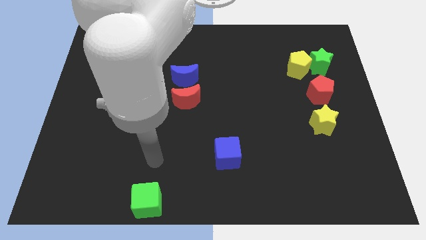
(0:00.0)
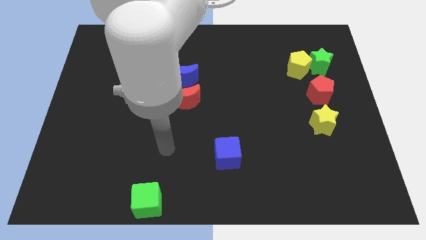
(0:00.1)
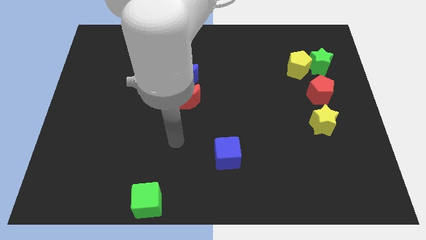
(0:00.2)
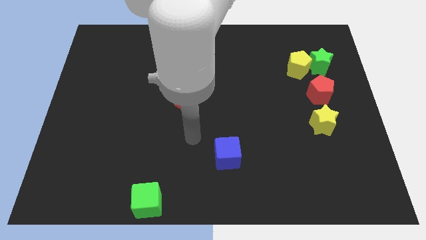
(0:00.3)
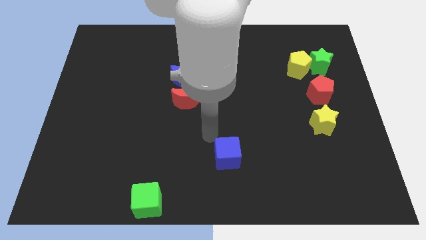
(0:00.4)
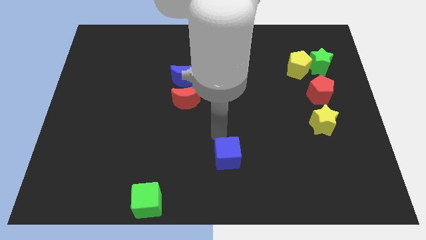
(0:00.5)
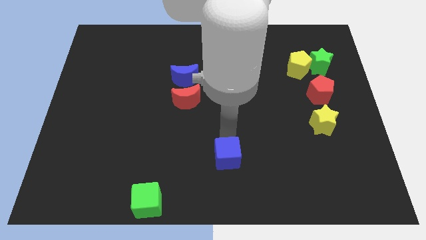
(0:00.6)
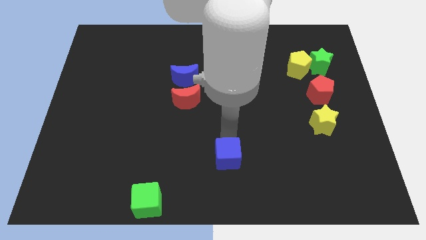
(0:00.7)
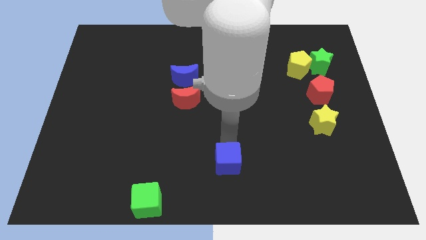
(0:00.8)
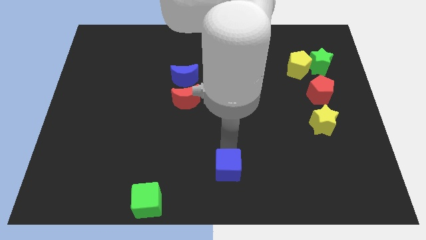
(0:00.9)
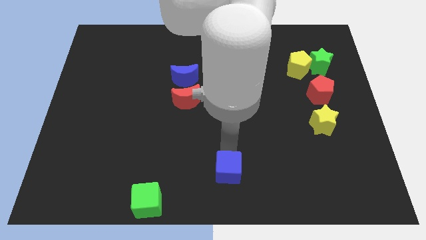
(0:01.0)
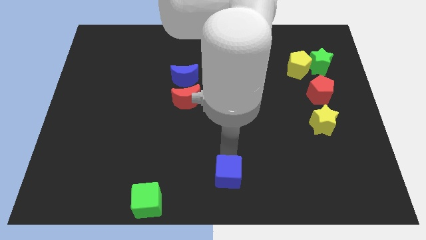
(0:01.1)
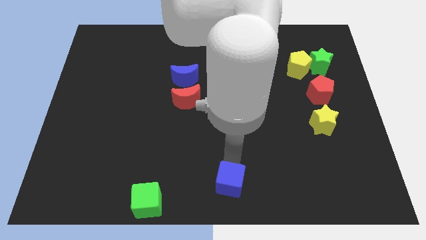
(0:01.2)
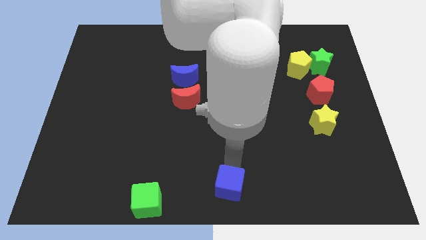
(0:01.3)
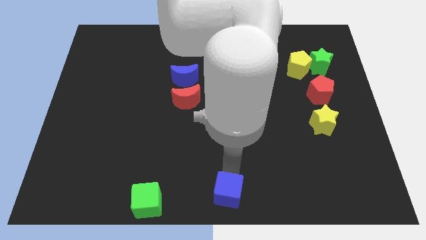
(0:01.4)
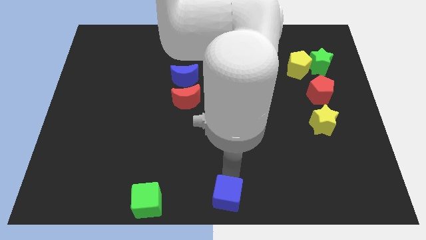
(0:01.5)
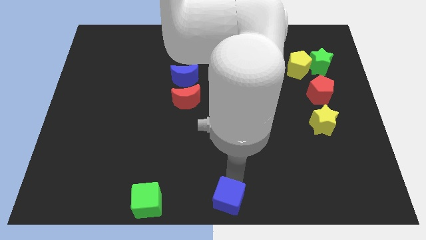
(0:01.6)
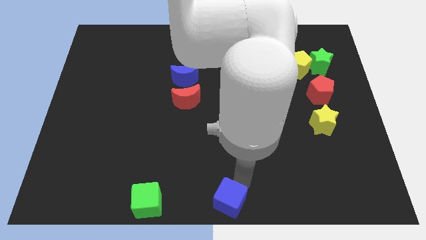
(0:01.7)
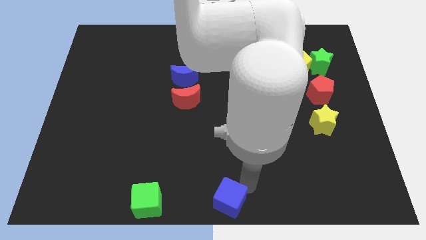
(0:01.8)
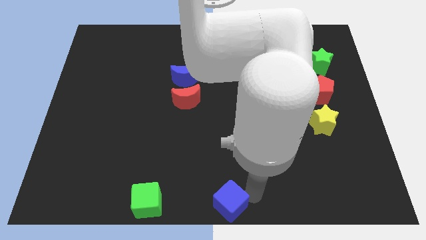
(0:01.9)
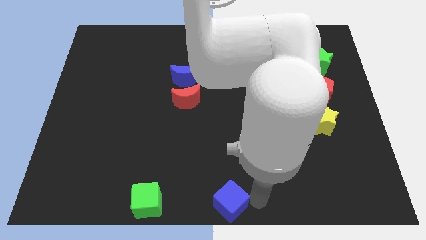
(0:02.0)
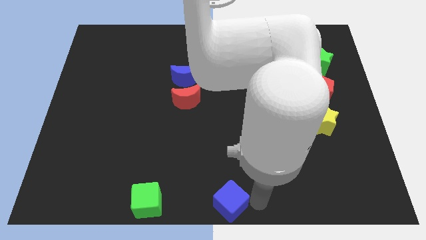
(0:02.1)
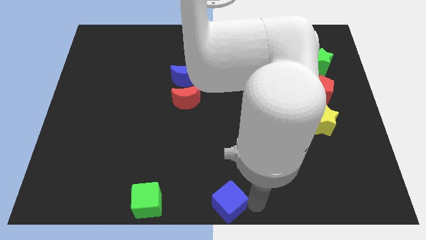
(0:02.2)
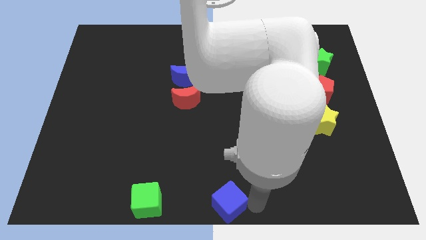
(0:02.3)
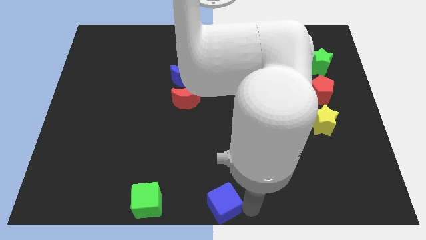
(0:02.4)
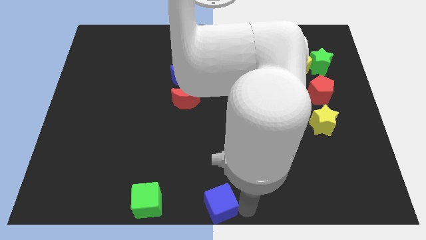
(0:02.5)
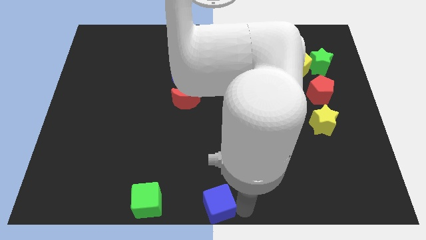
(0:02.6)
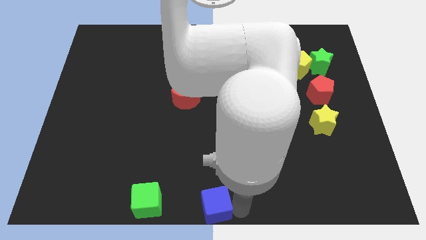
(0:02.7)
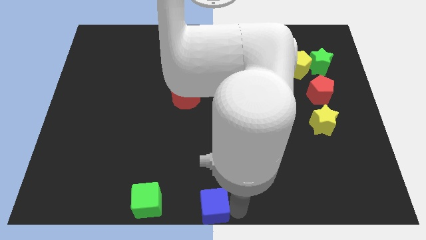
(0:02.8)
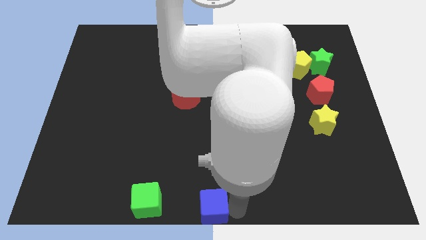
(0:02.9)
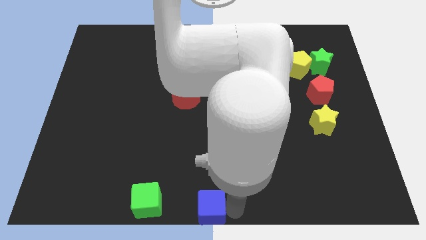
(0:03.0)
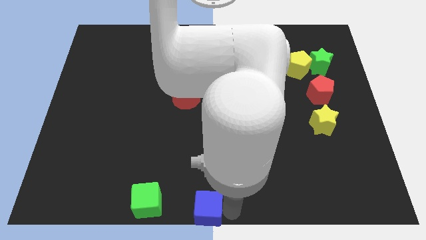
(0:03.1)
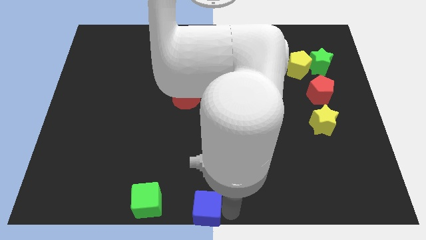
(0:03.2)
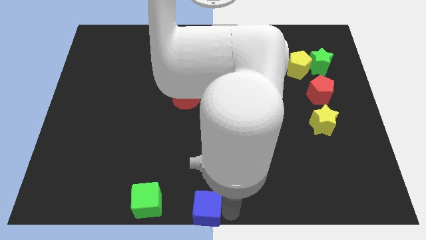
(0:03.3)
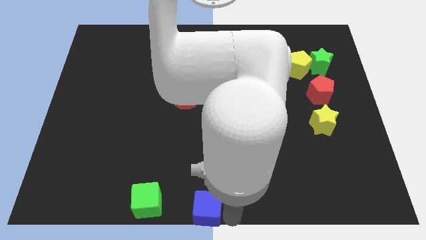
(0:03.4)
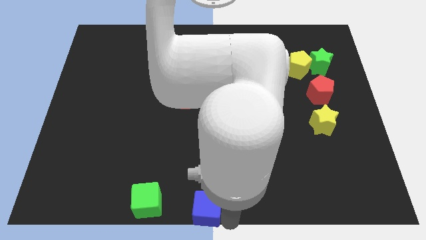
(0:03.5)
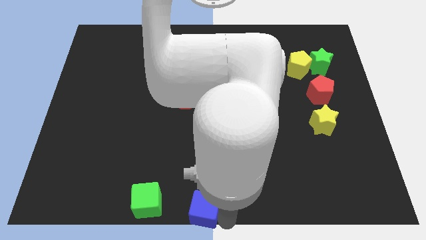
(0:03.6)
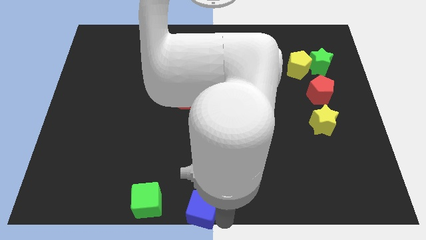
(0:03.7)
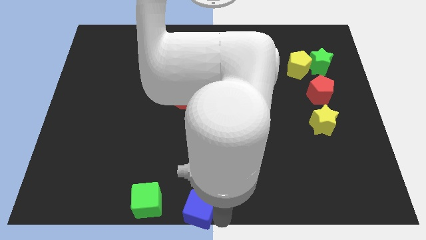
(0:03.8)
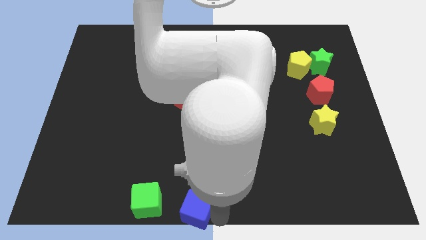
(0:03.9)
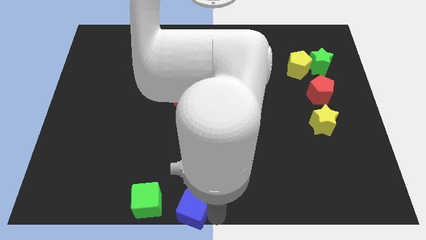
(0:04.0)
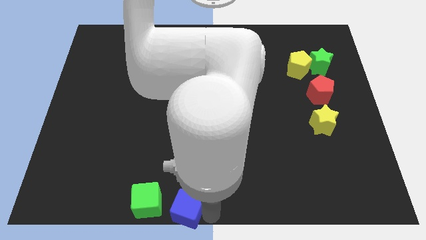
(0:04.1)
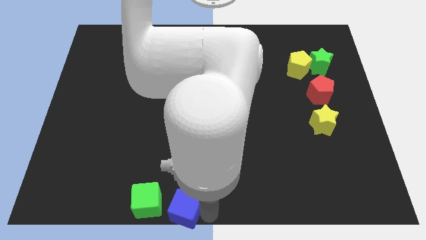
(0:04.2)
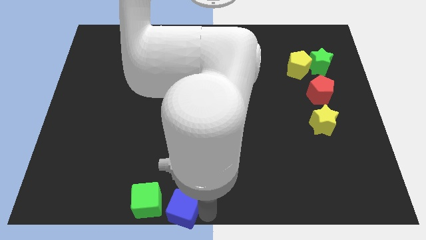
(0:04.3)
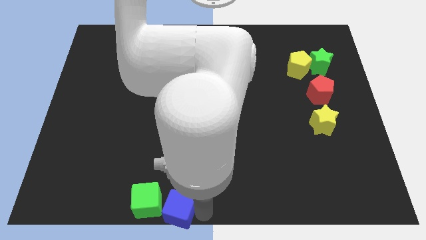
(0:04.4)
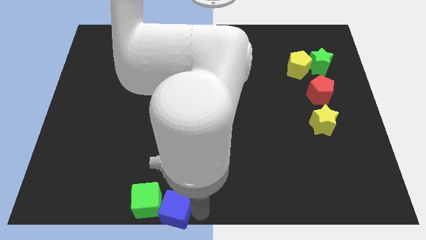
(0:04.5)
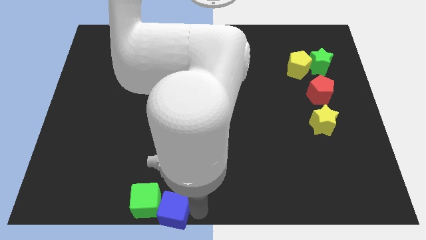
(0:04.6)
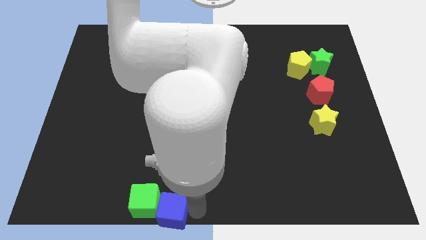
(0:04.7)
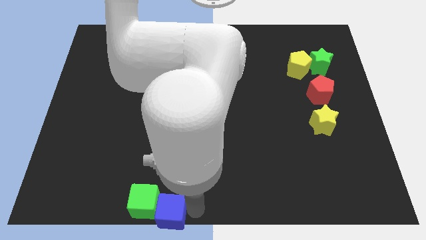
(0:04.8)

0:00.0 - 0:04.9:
push the blue cube into the right side of the green cube

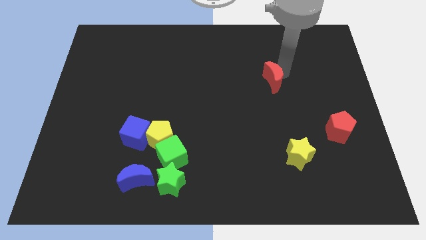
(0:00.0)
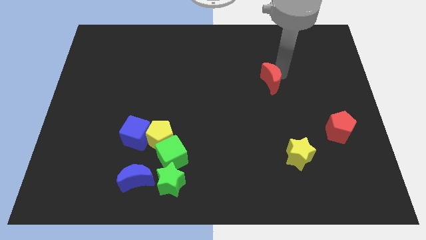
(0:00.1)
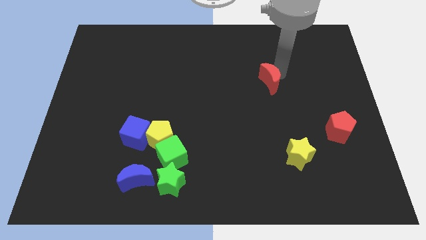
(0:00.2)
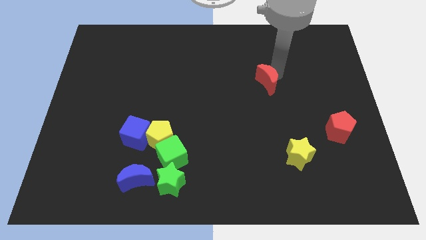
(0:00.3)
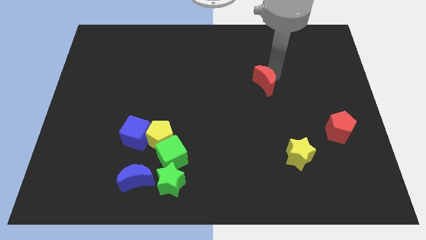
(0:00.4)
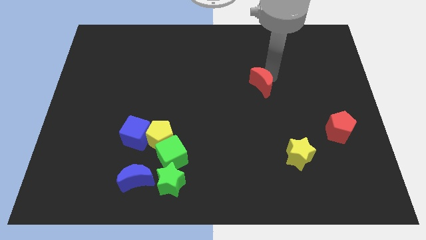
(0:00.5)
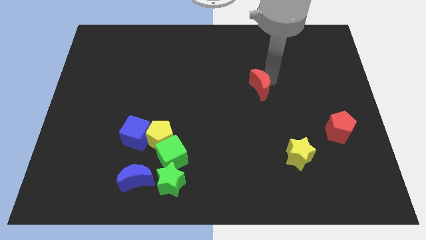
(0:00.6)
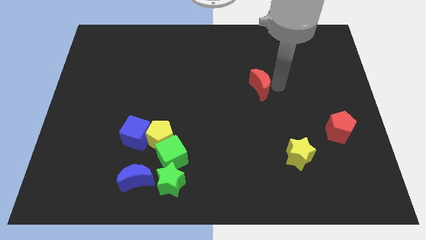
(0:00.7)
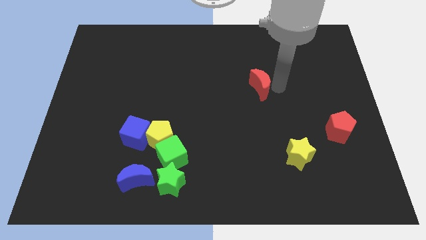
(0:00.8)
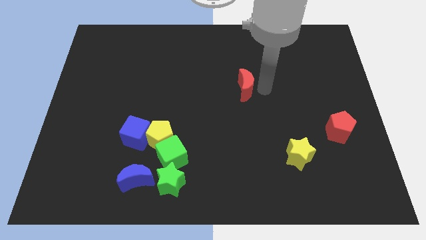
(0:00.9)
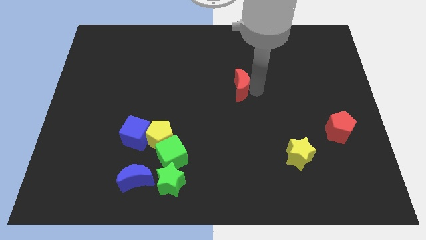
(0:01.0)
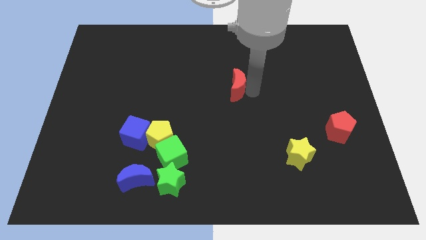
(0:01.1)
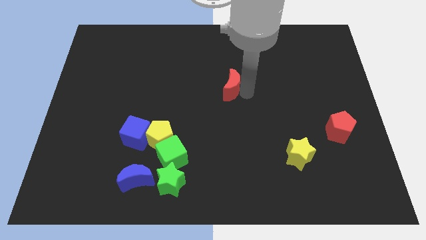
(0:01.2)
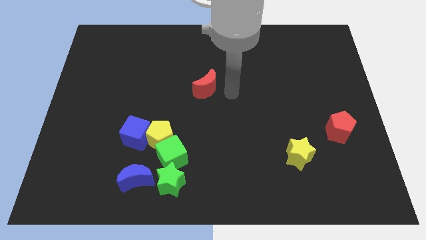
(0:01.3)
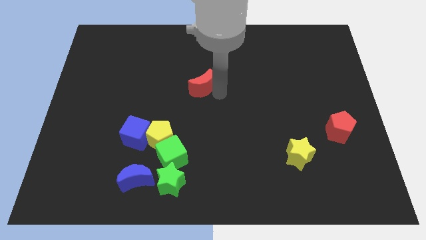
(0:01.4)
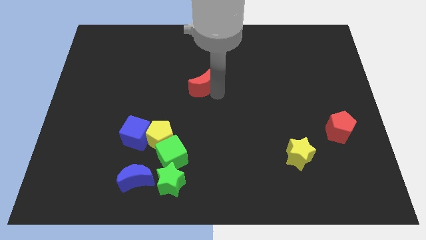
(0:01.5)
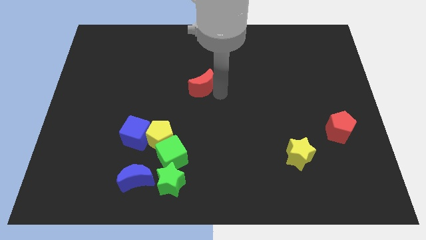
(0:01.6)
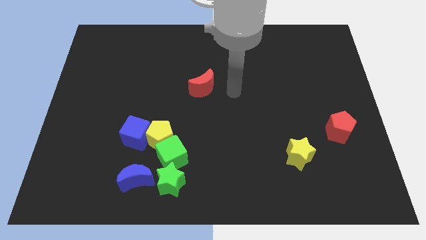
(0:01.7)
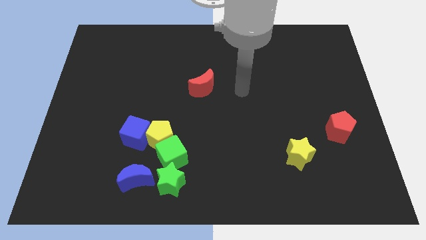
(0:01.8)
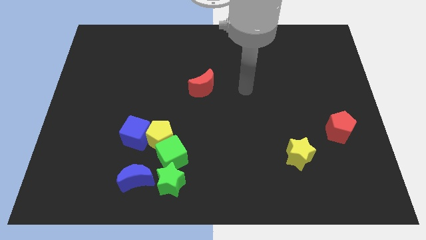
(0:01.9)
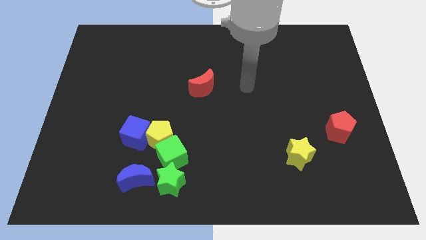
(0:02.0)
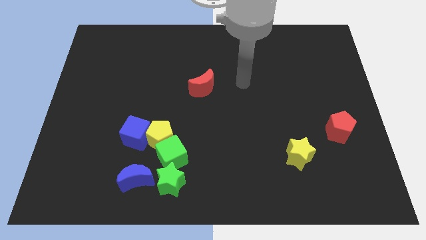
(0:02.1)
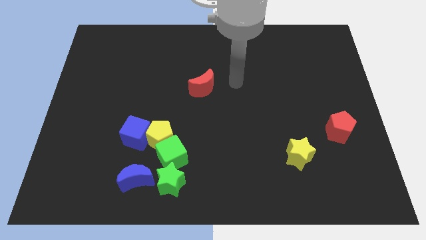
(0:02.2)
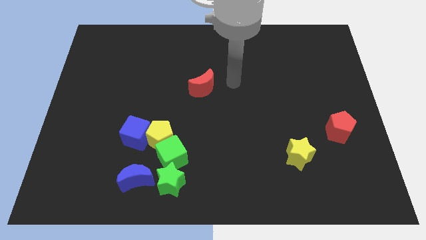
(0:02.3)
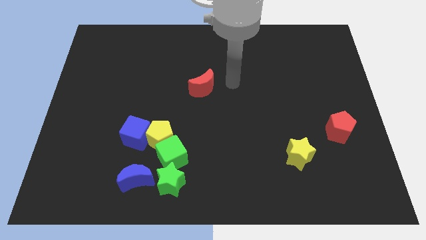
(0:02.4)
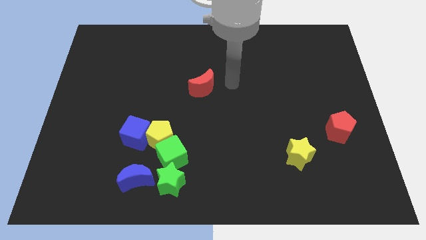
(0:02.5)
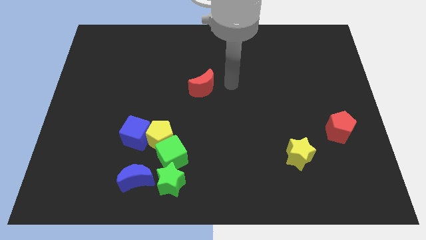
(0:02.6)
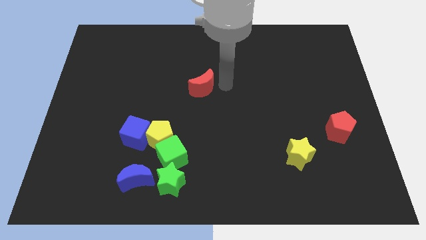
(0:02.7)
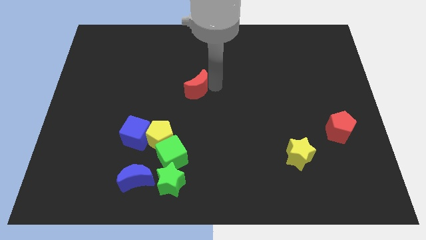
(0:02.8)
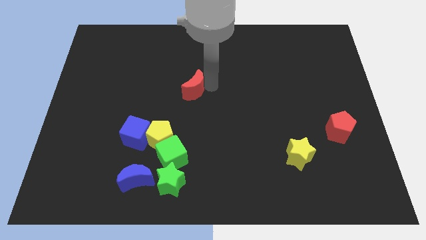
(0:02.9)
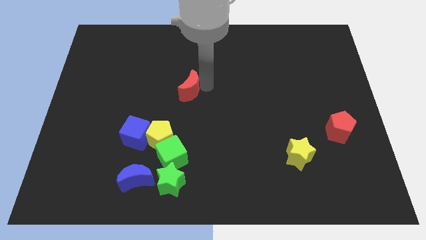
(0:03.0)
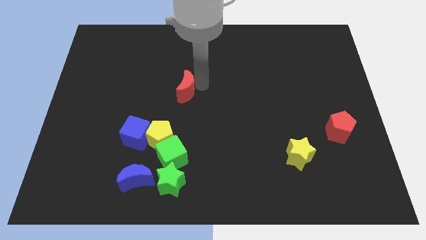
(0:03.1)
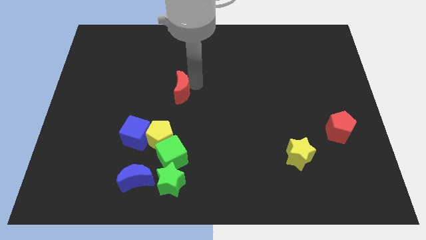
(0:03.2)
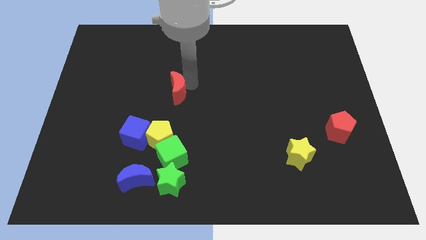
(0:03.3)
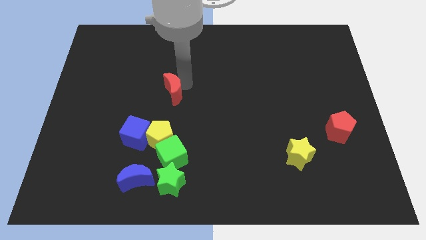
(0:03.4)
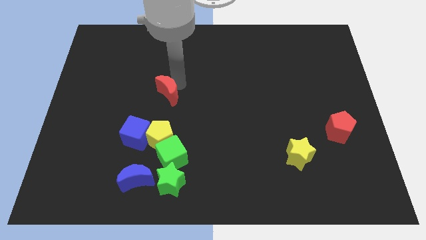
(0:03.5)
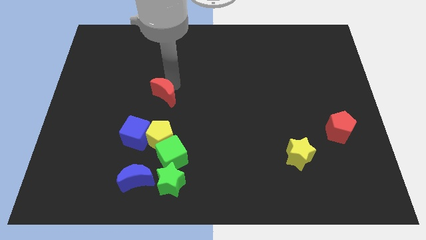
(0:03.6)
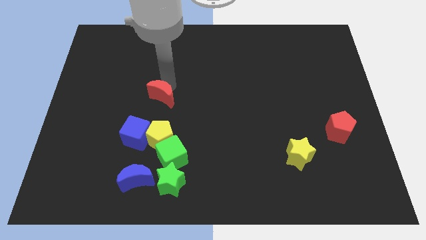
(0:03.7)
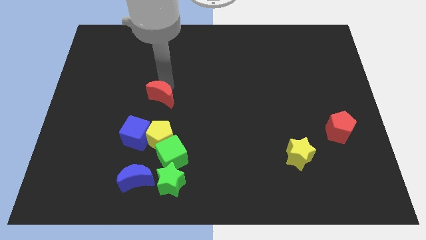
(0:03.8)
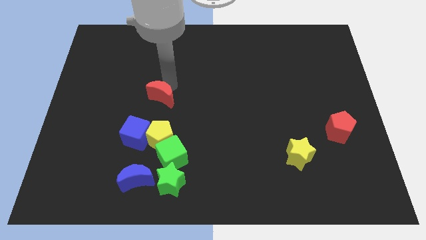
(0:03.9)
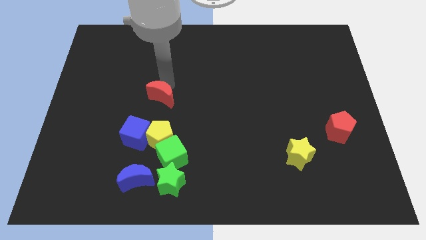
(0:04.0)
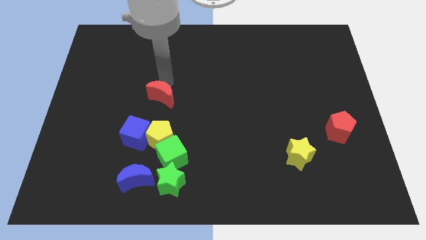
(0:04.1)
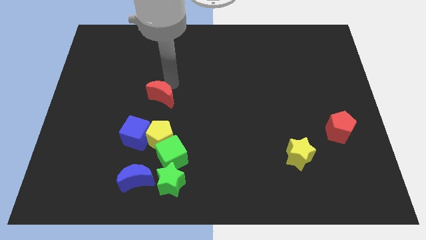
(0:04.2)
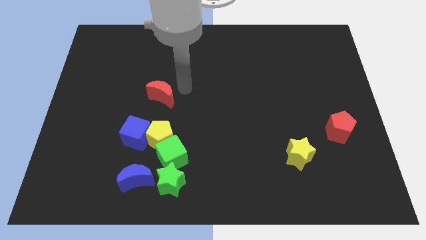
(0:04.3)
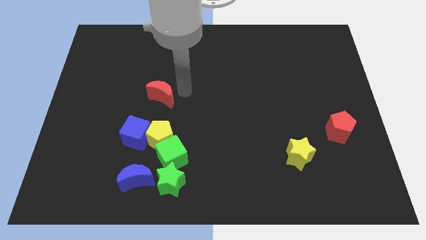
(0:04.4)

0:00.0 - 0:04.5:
place the red moon above the yellow pentagon
